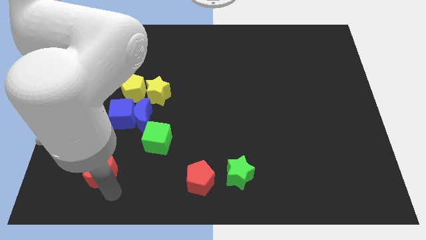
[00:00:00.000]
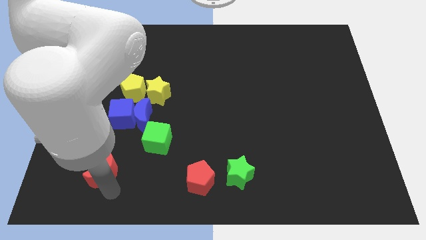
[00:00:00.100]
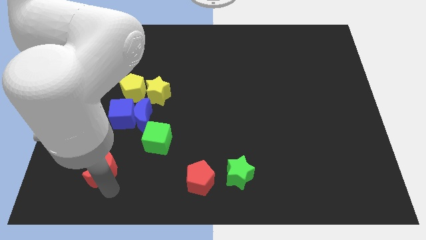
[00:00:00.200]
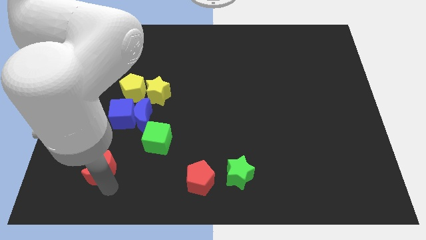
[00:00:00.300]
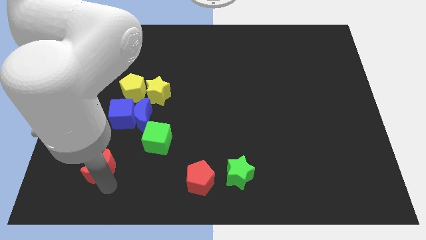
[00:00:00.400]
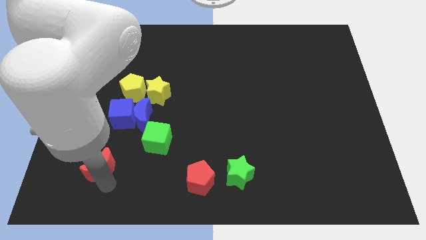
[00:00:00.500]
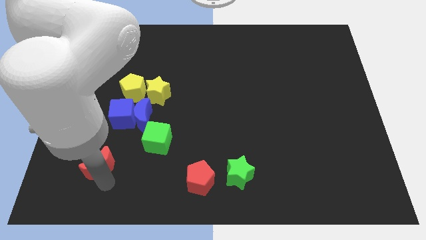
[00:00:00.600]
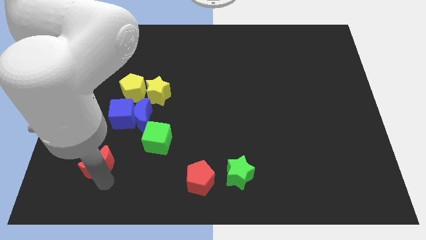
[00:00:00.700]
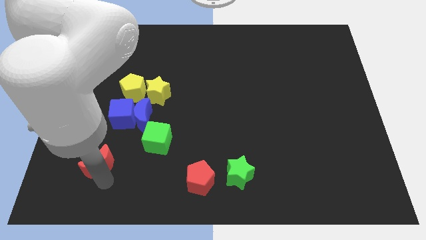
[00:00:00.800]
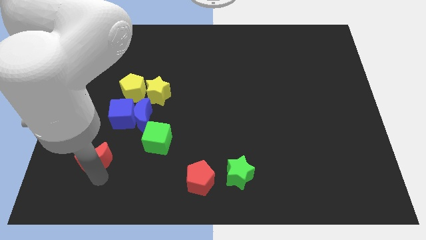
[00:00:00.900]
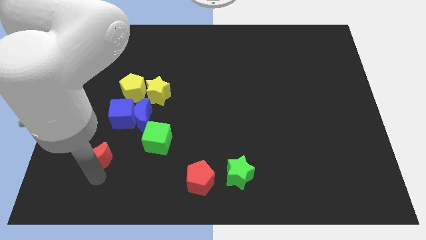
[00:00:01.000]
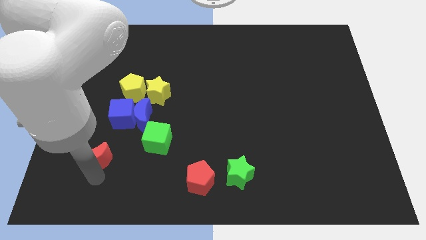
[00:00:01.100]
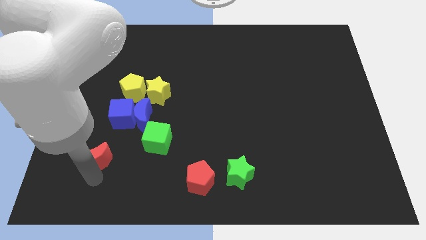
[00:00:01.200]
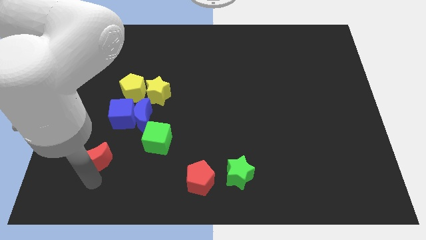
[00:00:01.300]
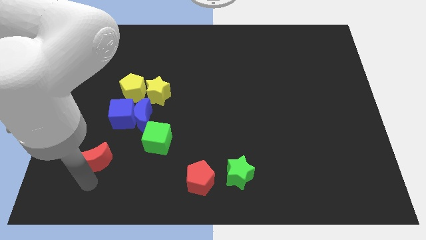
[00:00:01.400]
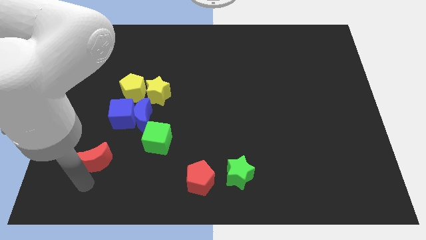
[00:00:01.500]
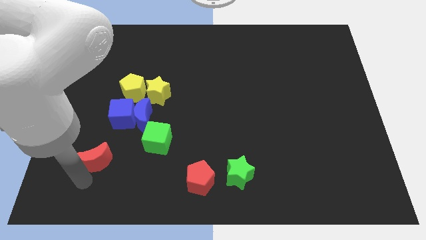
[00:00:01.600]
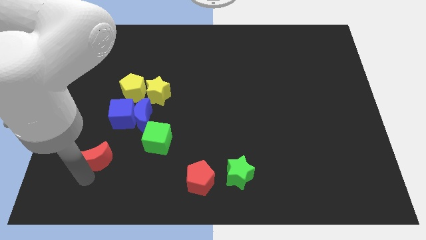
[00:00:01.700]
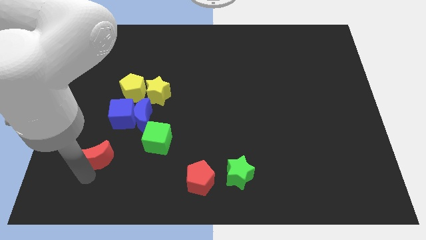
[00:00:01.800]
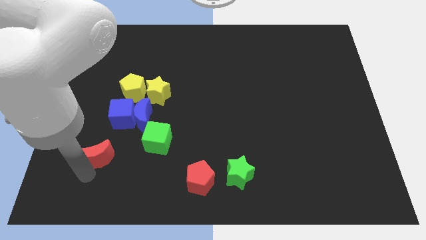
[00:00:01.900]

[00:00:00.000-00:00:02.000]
slide the red crescent slightly towards up

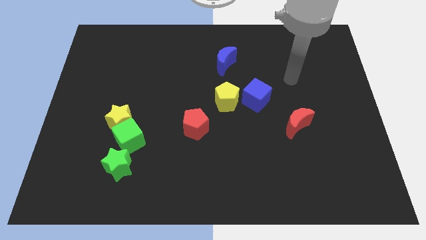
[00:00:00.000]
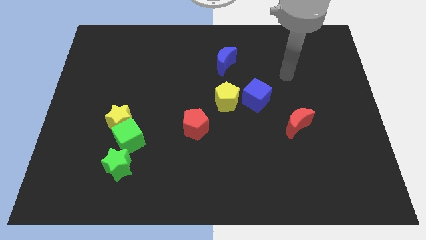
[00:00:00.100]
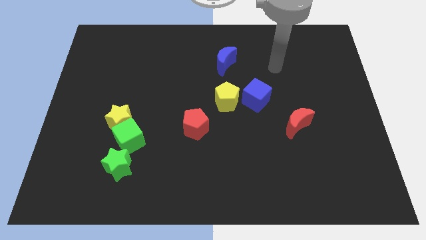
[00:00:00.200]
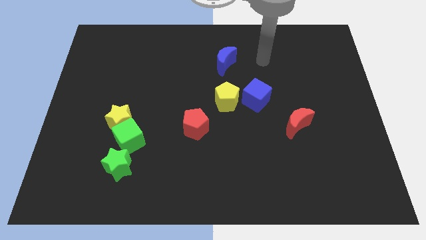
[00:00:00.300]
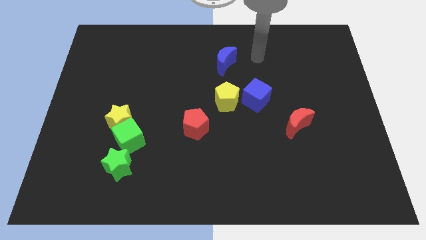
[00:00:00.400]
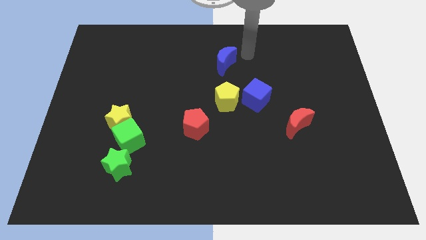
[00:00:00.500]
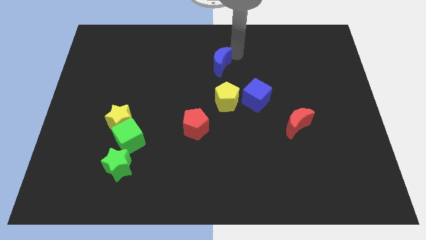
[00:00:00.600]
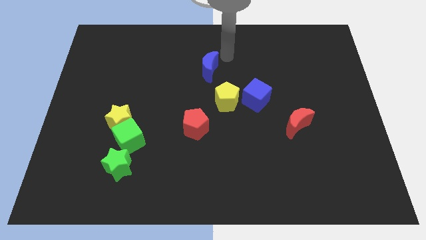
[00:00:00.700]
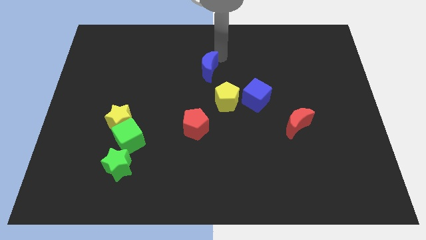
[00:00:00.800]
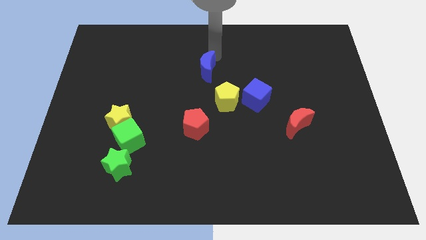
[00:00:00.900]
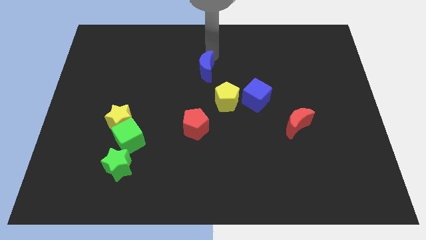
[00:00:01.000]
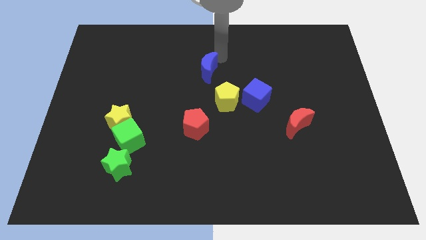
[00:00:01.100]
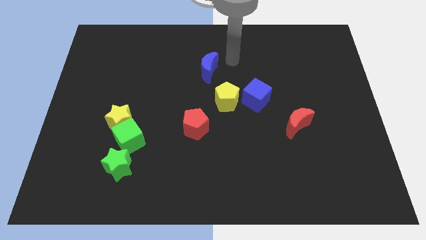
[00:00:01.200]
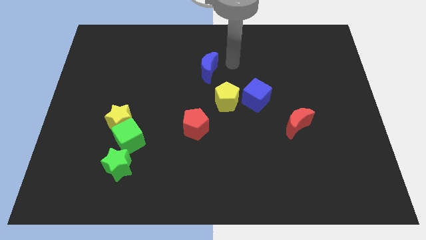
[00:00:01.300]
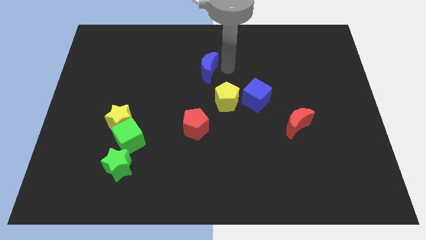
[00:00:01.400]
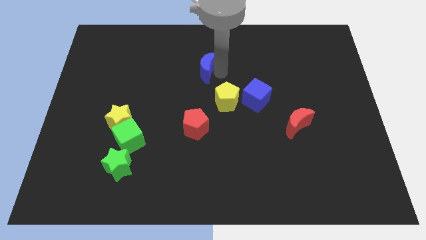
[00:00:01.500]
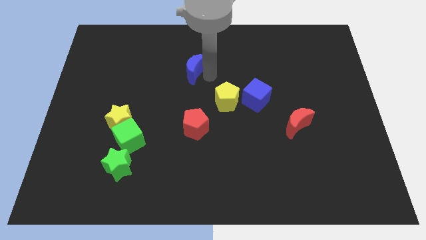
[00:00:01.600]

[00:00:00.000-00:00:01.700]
move the blue moon slightly to the left

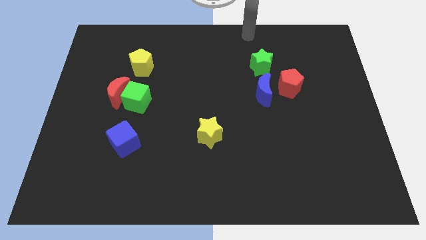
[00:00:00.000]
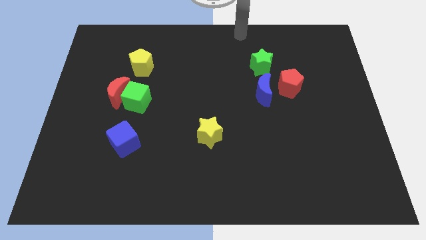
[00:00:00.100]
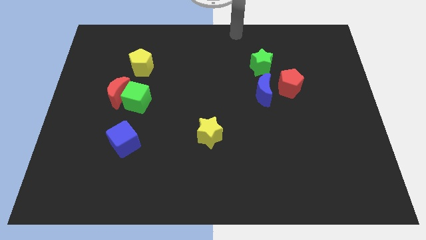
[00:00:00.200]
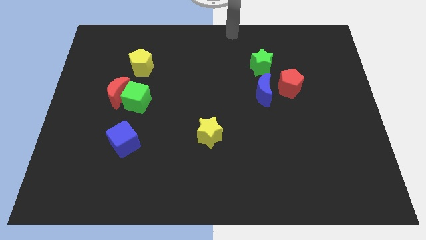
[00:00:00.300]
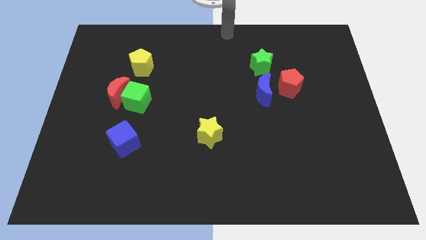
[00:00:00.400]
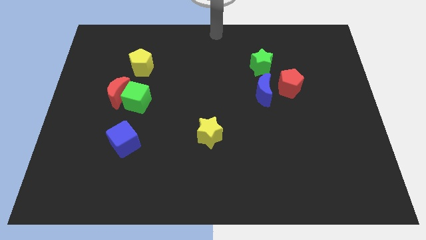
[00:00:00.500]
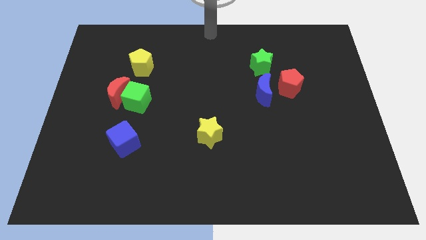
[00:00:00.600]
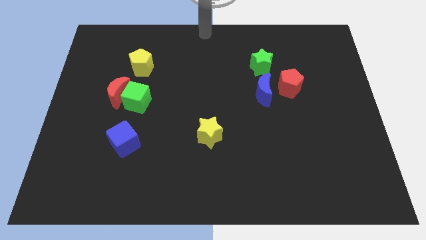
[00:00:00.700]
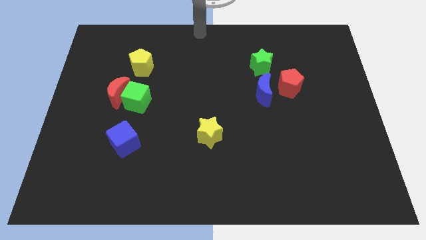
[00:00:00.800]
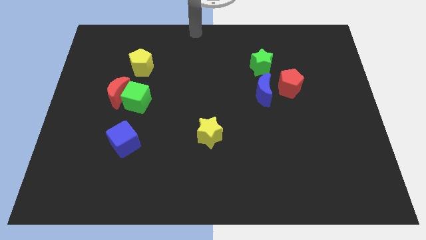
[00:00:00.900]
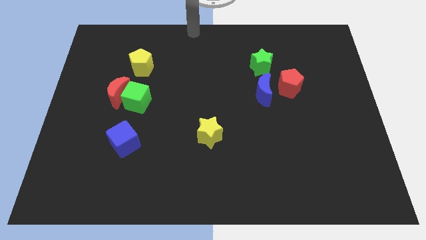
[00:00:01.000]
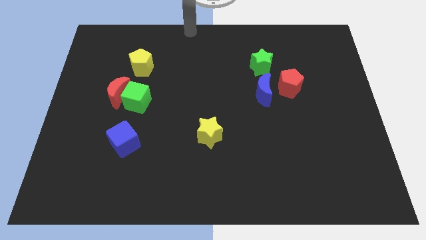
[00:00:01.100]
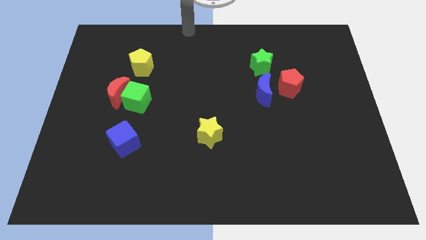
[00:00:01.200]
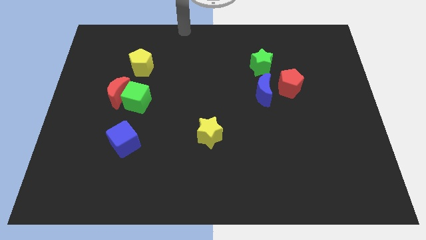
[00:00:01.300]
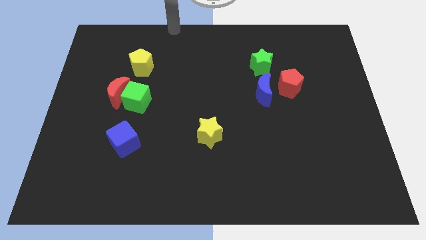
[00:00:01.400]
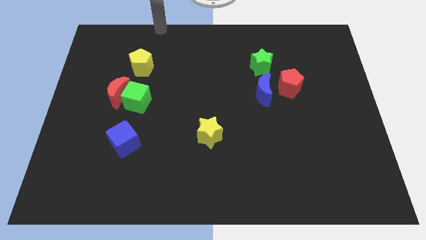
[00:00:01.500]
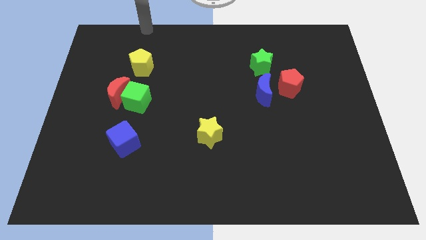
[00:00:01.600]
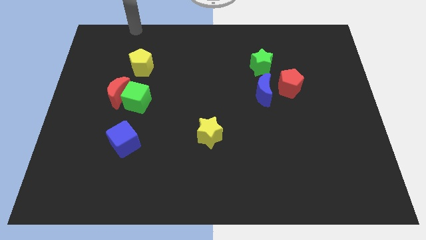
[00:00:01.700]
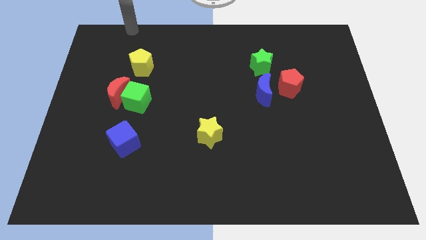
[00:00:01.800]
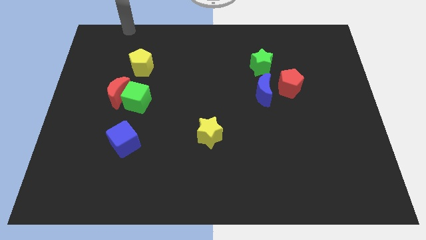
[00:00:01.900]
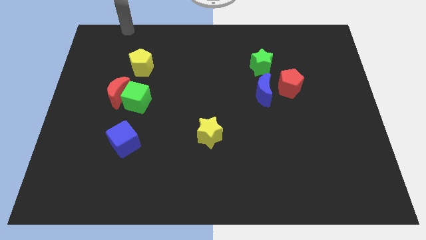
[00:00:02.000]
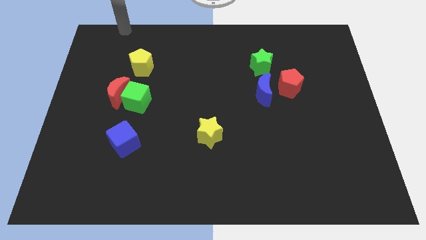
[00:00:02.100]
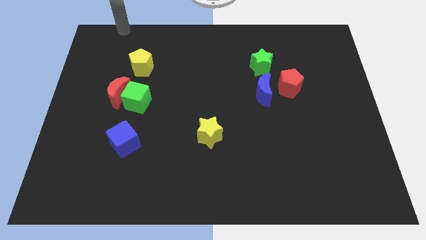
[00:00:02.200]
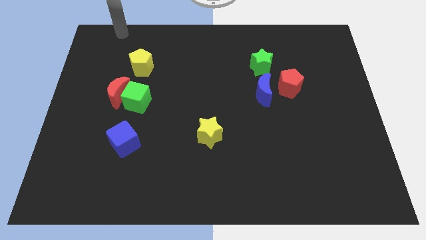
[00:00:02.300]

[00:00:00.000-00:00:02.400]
place your arm towards the top left of the board

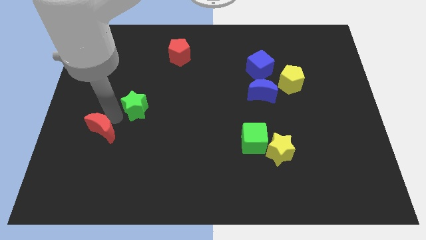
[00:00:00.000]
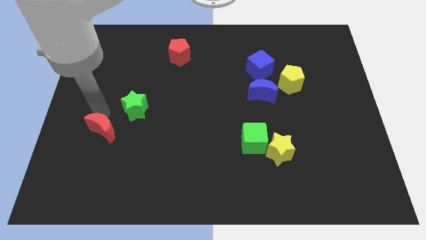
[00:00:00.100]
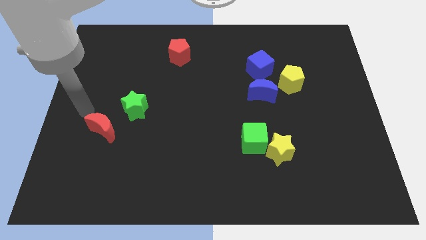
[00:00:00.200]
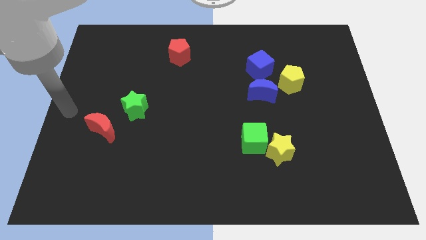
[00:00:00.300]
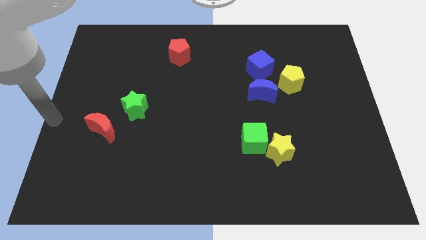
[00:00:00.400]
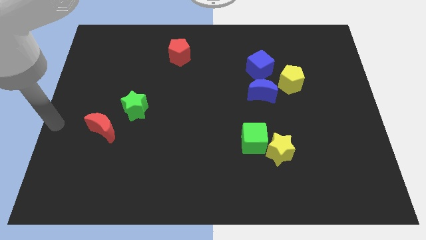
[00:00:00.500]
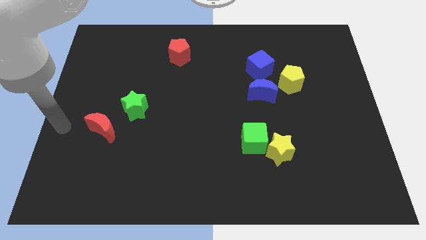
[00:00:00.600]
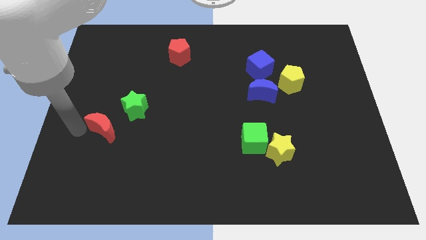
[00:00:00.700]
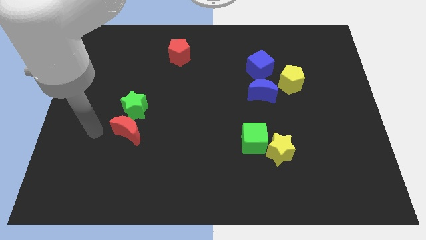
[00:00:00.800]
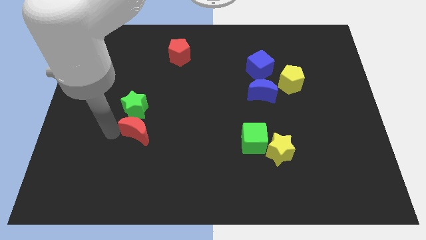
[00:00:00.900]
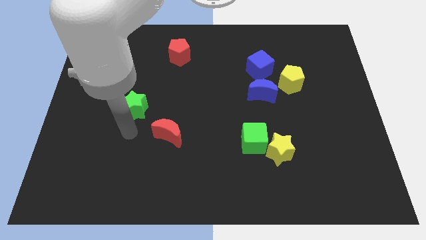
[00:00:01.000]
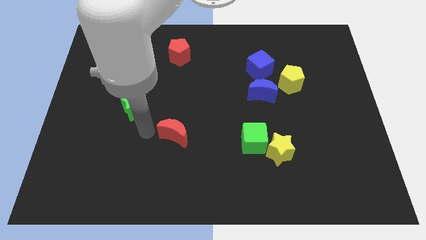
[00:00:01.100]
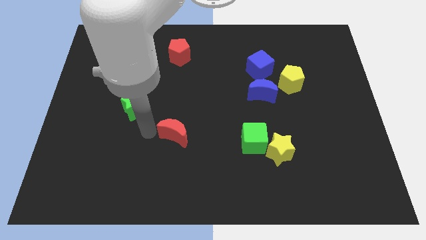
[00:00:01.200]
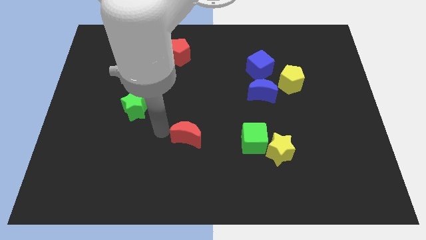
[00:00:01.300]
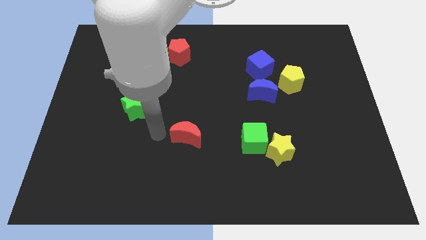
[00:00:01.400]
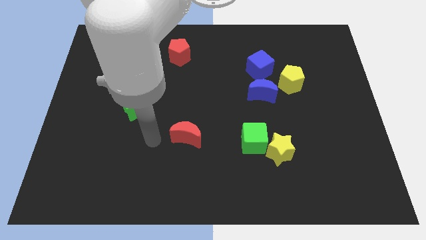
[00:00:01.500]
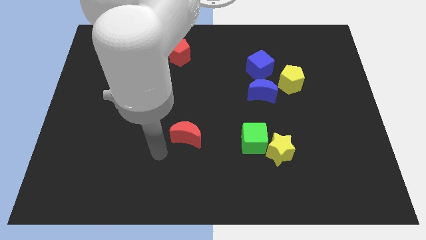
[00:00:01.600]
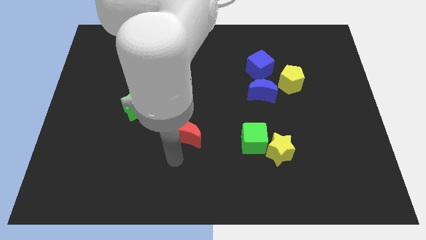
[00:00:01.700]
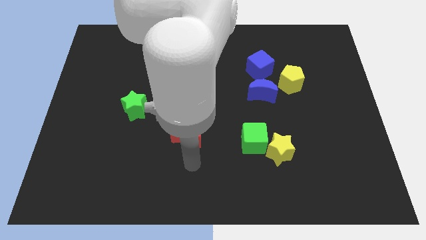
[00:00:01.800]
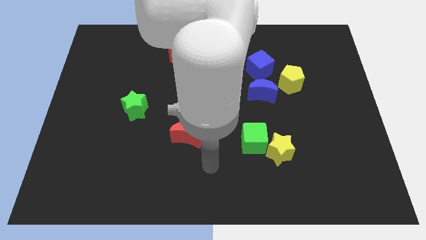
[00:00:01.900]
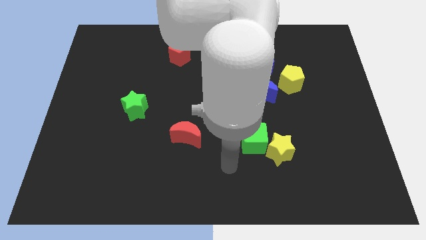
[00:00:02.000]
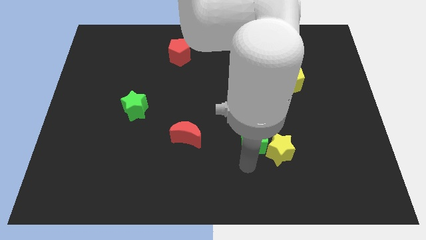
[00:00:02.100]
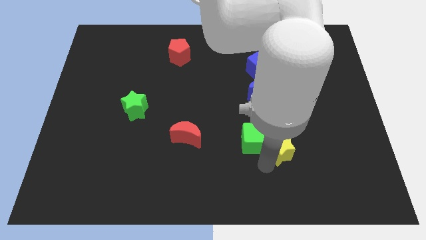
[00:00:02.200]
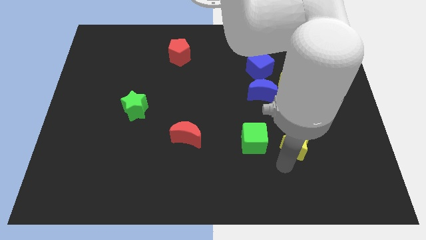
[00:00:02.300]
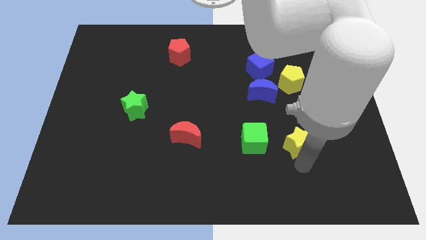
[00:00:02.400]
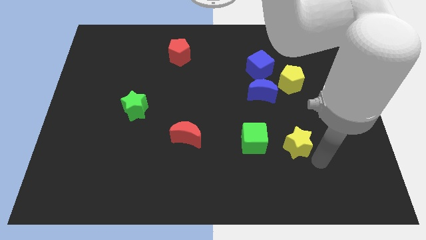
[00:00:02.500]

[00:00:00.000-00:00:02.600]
place your arm below yellow star

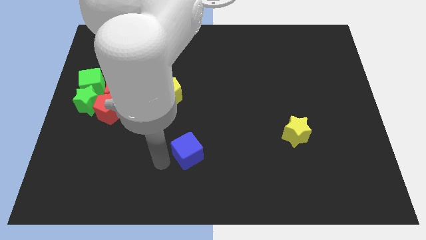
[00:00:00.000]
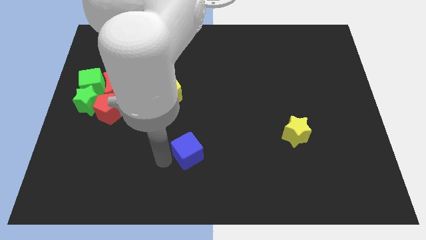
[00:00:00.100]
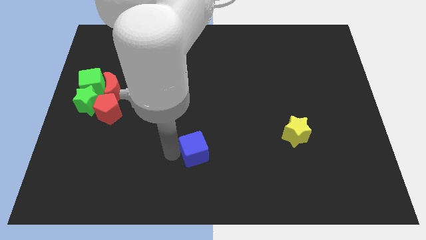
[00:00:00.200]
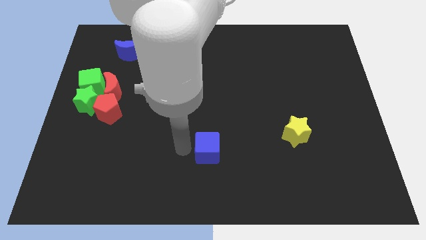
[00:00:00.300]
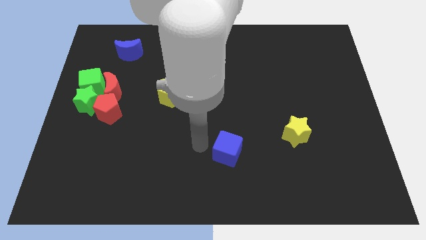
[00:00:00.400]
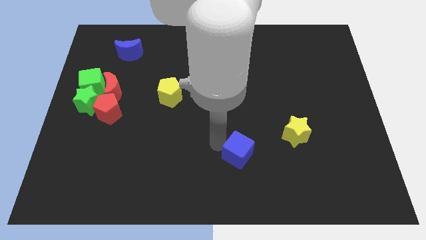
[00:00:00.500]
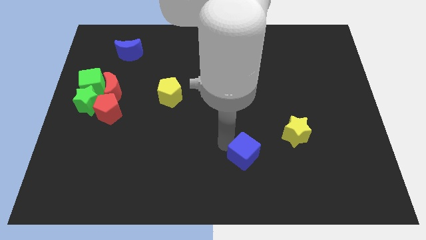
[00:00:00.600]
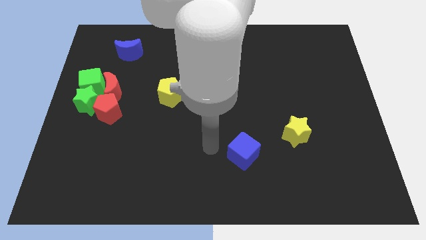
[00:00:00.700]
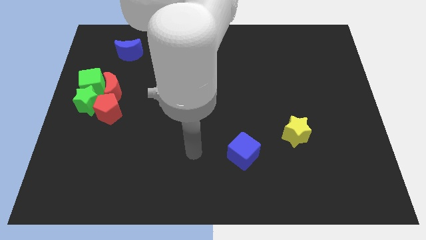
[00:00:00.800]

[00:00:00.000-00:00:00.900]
push the blue cube towards the yellow star
